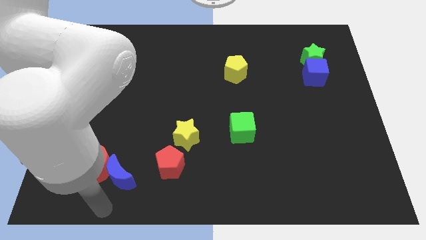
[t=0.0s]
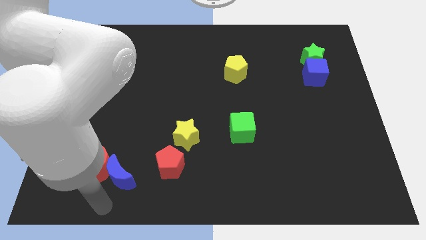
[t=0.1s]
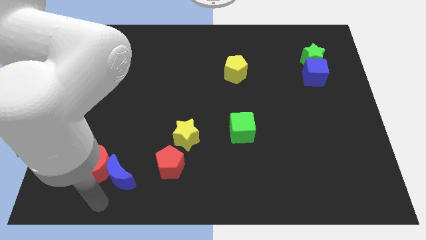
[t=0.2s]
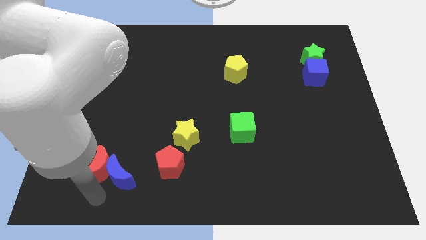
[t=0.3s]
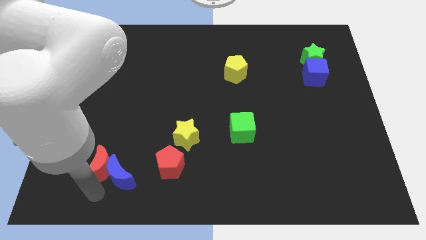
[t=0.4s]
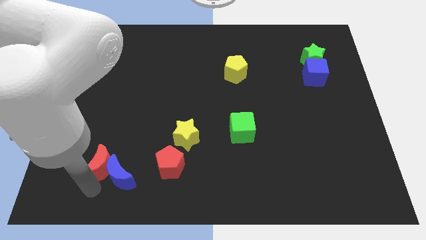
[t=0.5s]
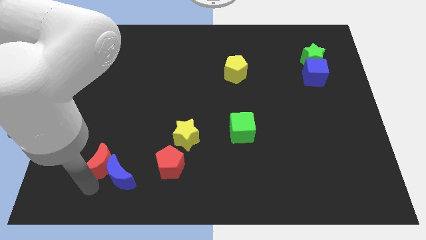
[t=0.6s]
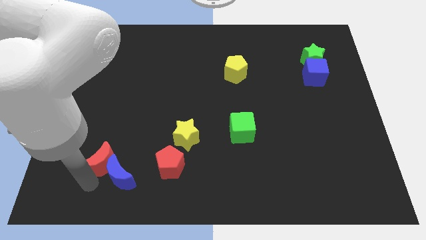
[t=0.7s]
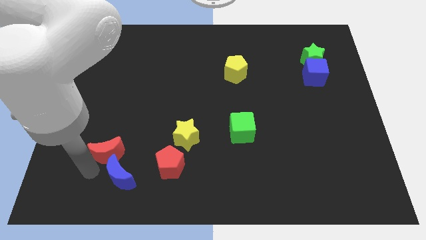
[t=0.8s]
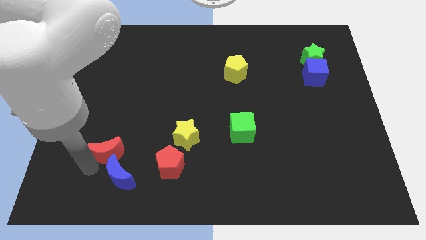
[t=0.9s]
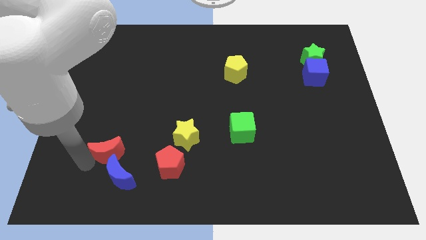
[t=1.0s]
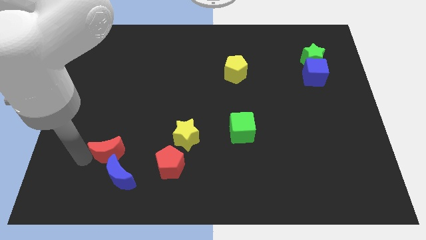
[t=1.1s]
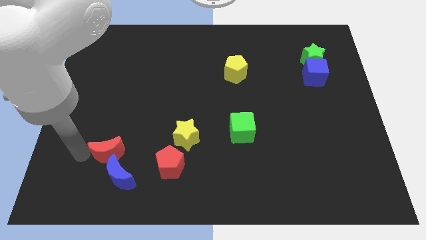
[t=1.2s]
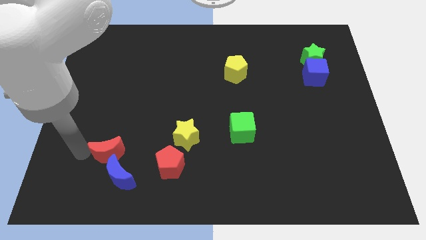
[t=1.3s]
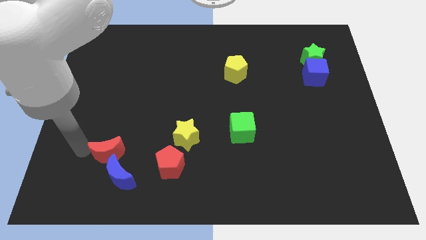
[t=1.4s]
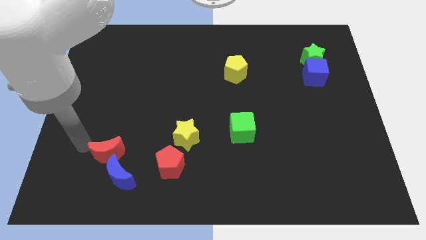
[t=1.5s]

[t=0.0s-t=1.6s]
slide the red moon vertically above the blue moon

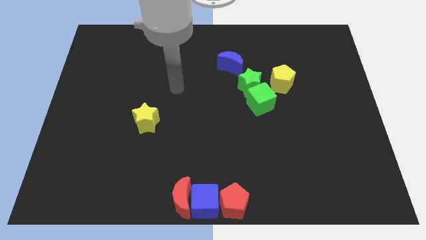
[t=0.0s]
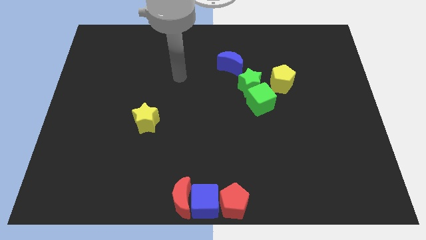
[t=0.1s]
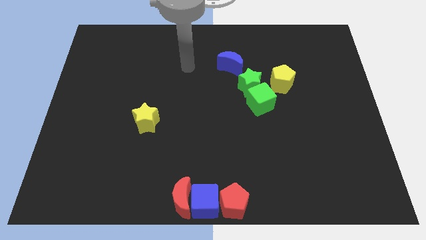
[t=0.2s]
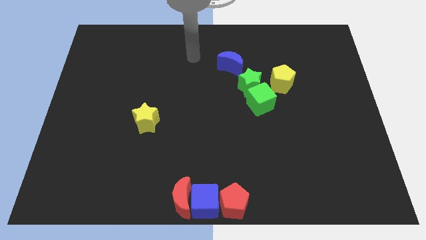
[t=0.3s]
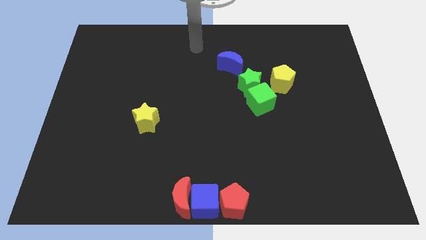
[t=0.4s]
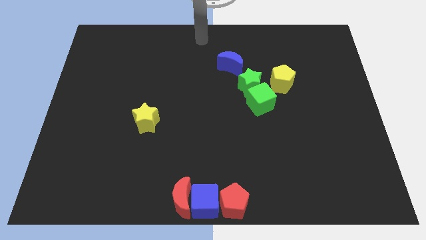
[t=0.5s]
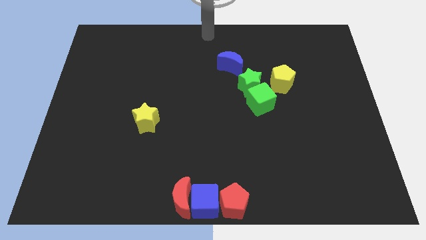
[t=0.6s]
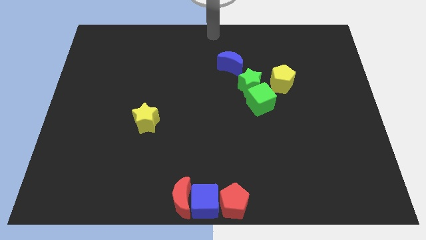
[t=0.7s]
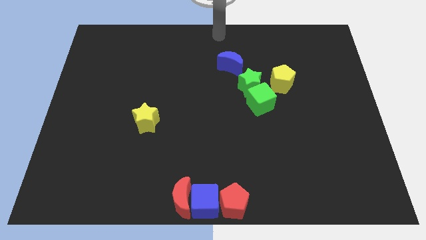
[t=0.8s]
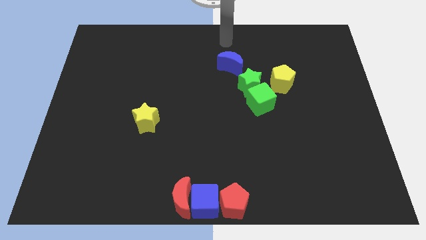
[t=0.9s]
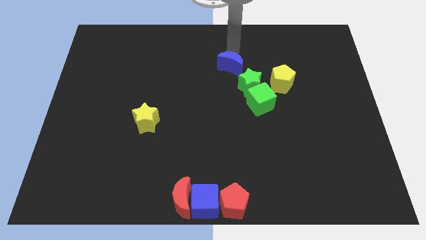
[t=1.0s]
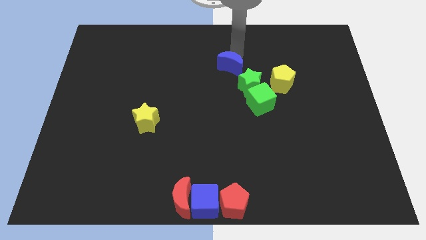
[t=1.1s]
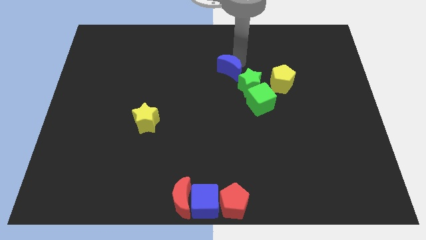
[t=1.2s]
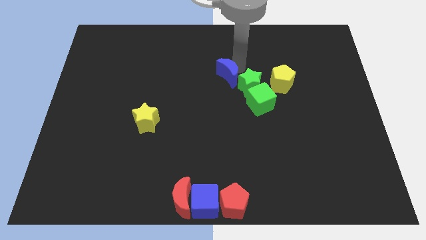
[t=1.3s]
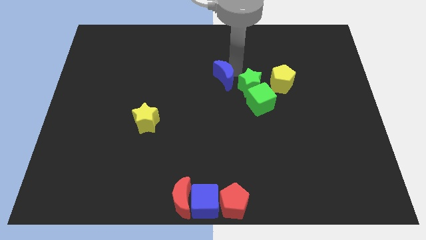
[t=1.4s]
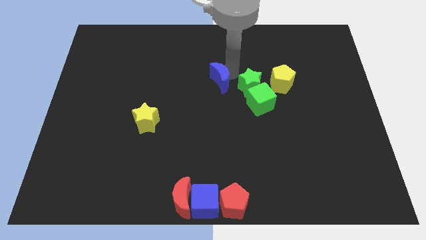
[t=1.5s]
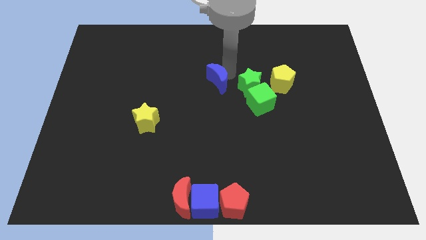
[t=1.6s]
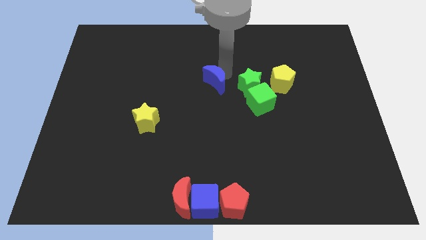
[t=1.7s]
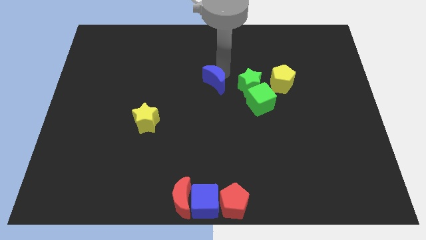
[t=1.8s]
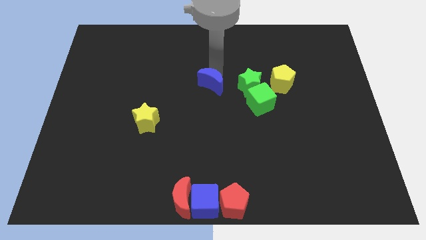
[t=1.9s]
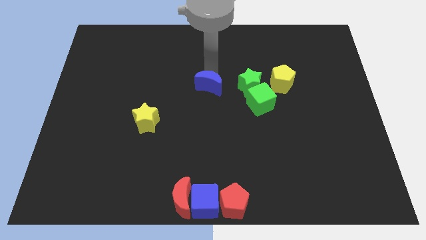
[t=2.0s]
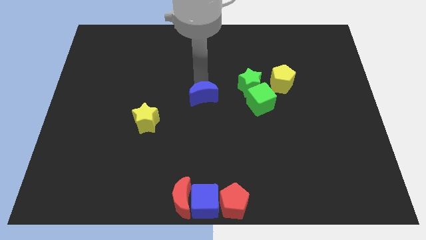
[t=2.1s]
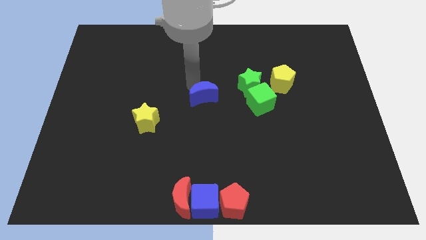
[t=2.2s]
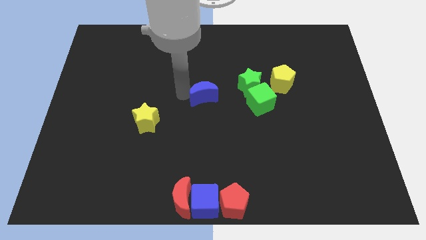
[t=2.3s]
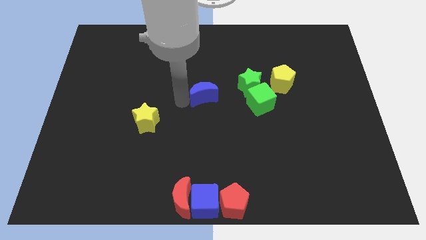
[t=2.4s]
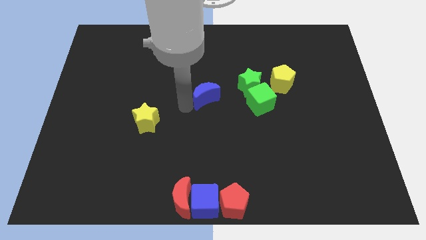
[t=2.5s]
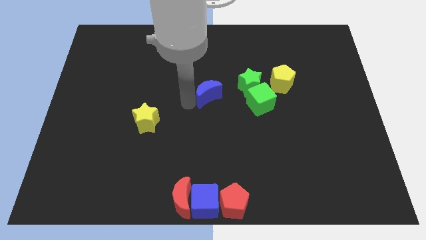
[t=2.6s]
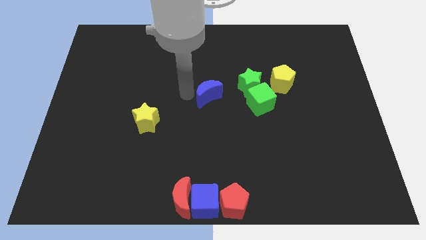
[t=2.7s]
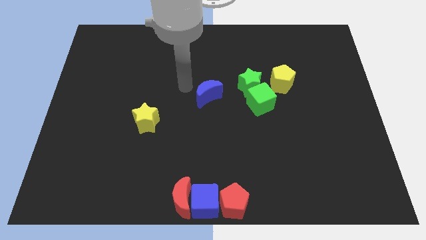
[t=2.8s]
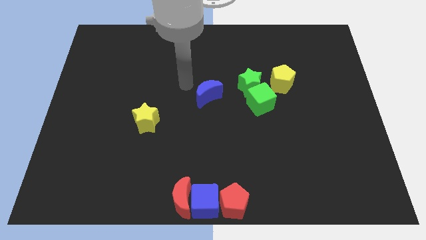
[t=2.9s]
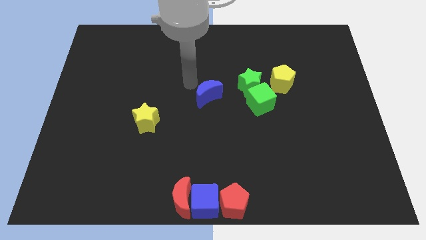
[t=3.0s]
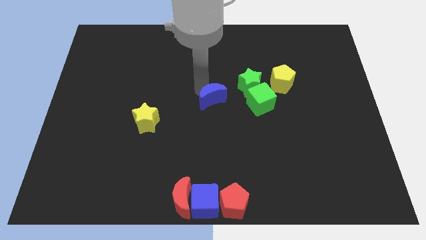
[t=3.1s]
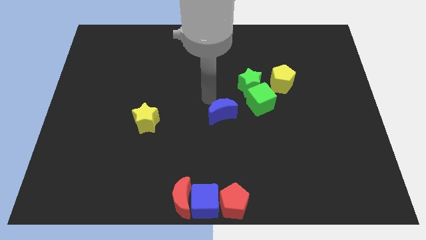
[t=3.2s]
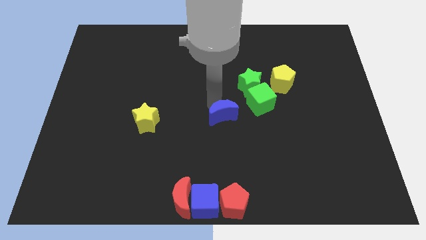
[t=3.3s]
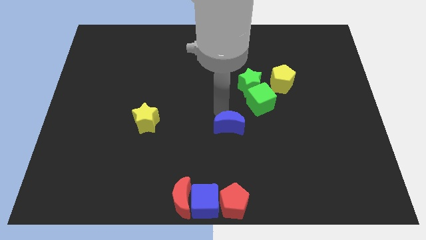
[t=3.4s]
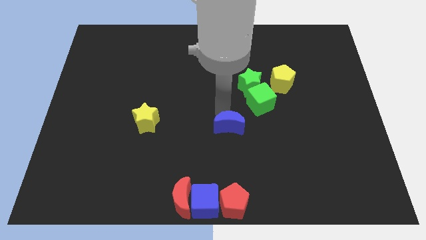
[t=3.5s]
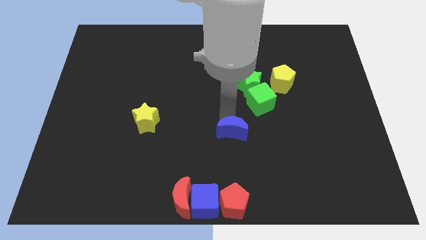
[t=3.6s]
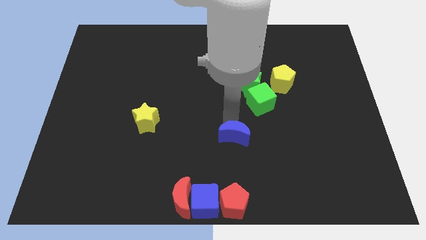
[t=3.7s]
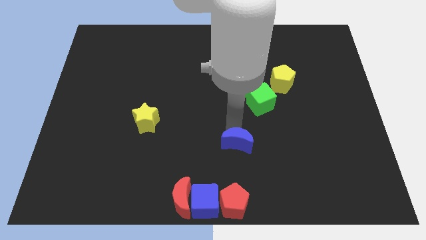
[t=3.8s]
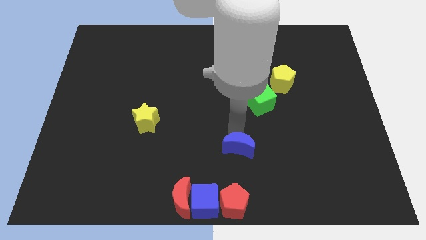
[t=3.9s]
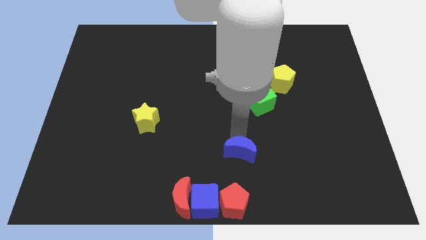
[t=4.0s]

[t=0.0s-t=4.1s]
slide blue moon down vertical to red pentagon

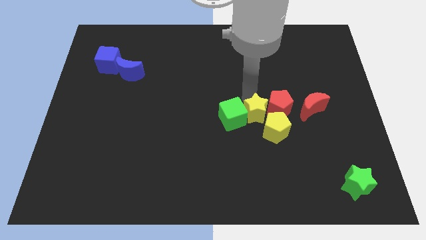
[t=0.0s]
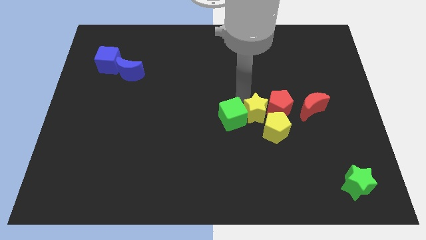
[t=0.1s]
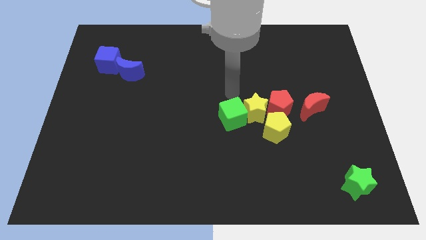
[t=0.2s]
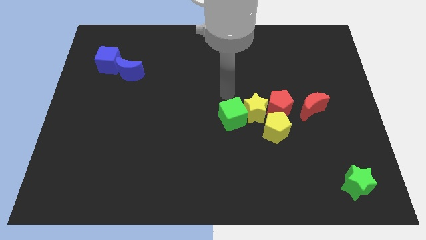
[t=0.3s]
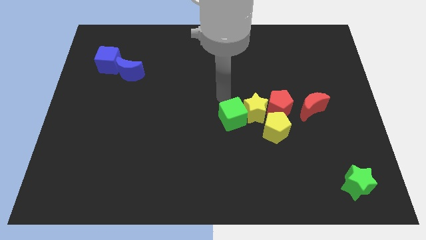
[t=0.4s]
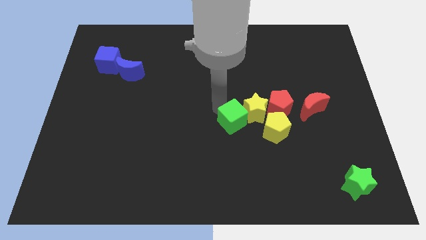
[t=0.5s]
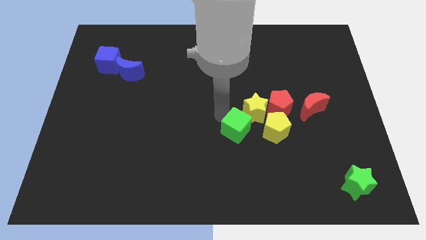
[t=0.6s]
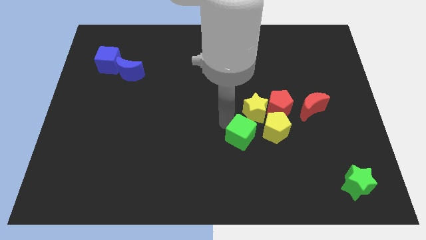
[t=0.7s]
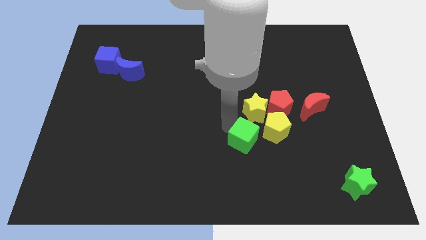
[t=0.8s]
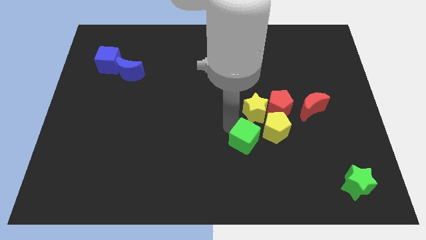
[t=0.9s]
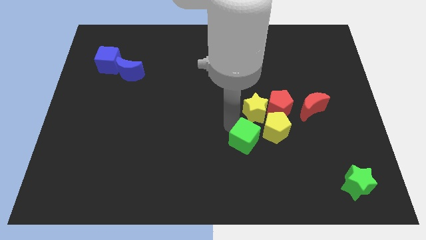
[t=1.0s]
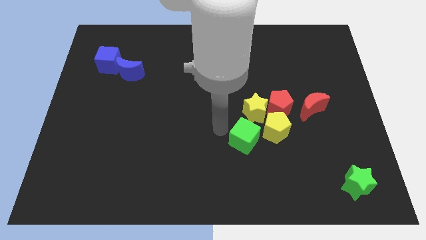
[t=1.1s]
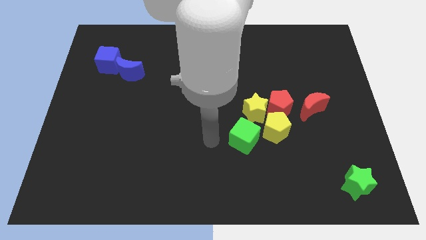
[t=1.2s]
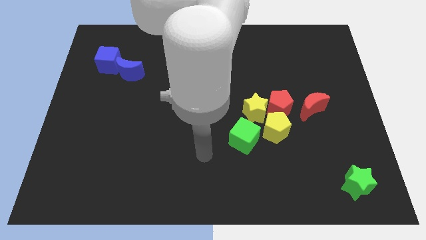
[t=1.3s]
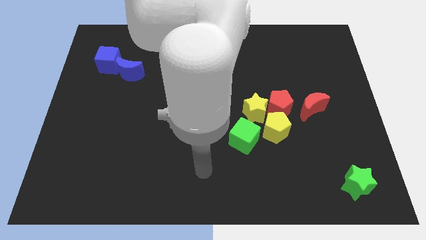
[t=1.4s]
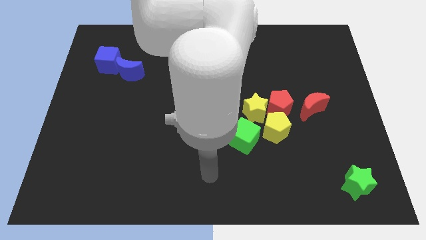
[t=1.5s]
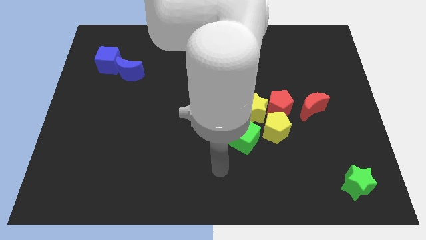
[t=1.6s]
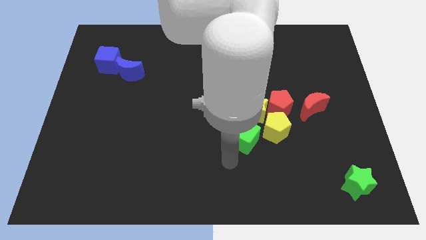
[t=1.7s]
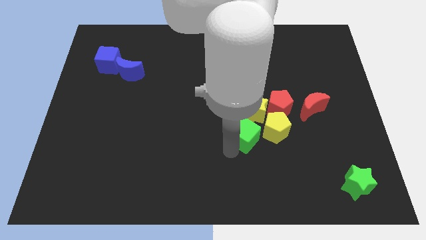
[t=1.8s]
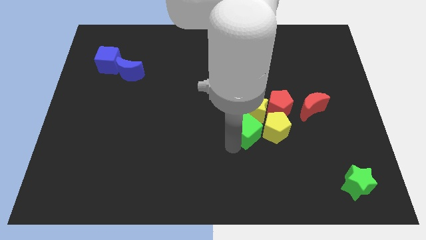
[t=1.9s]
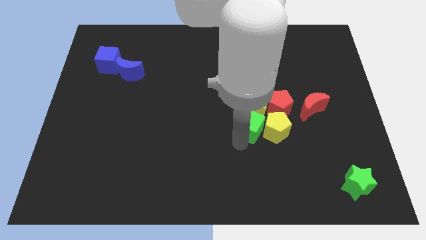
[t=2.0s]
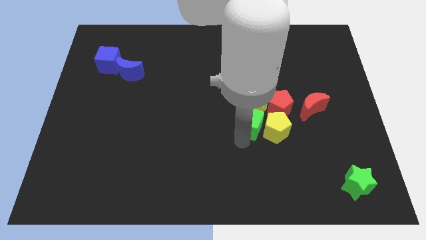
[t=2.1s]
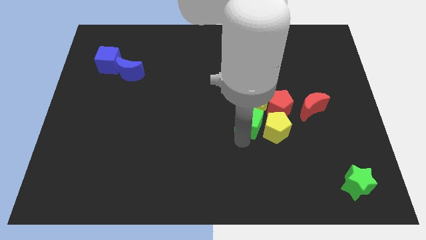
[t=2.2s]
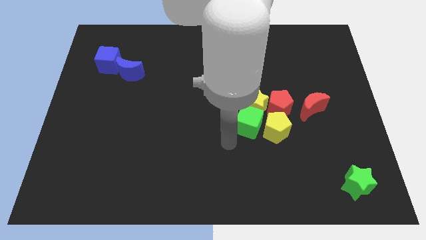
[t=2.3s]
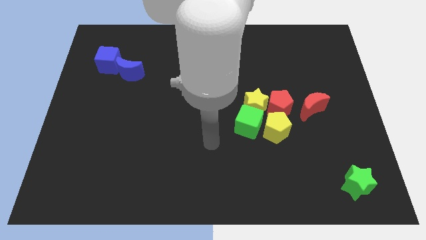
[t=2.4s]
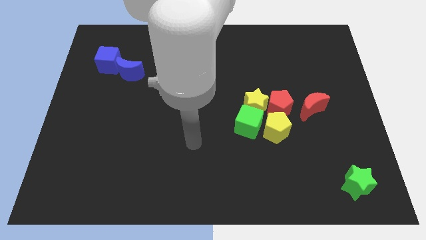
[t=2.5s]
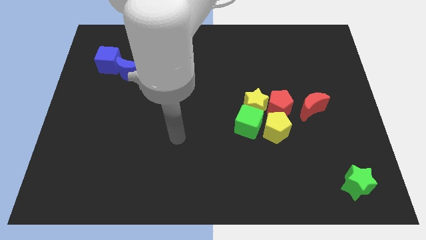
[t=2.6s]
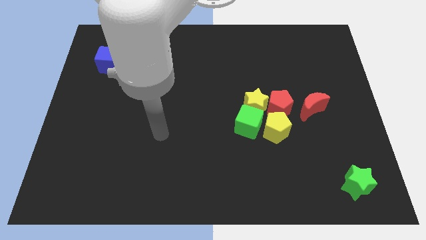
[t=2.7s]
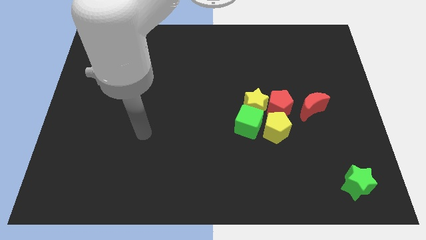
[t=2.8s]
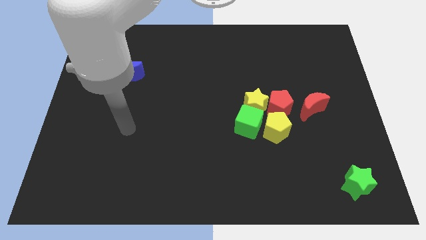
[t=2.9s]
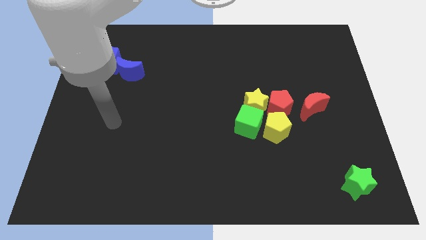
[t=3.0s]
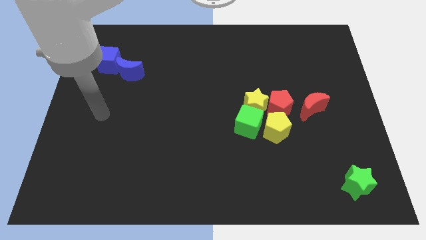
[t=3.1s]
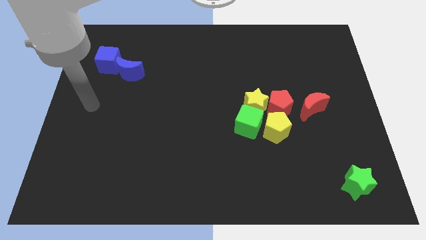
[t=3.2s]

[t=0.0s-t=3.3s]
push the green cube into the yellow star
